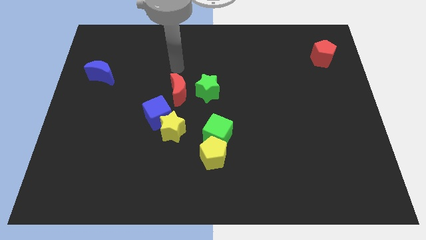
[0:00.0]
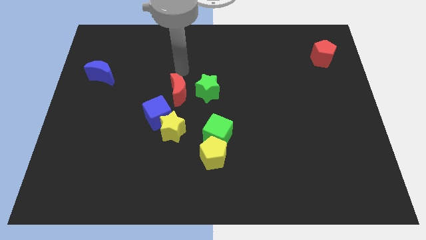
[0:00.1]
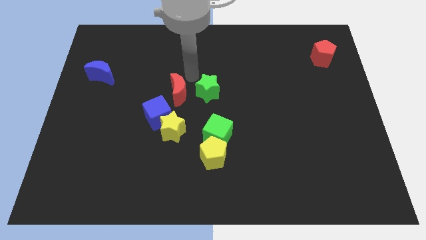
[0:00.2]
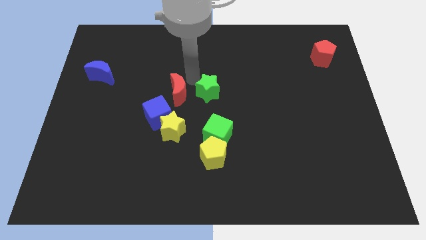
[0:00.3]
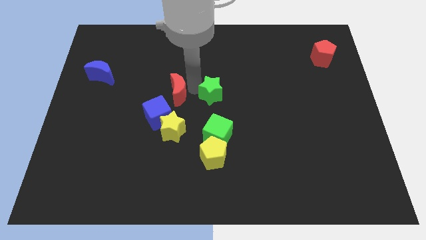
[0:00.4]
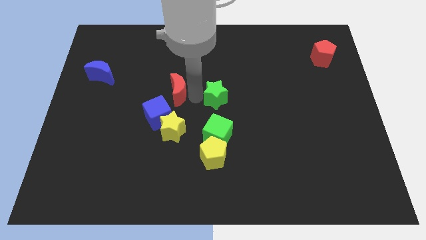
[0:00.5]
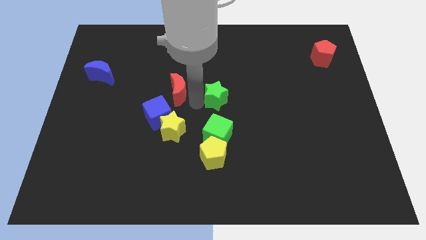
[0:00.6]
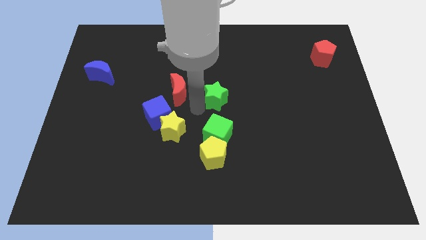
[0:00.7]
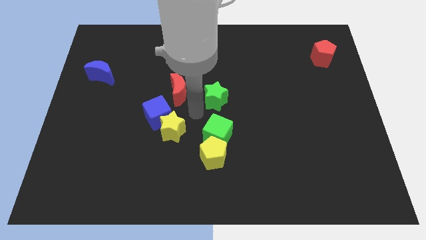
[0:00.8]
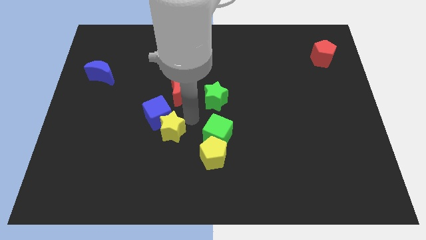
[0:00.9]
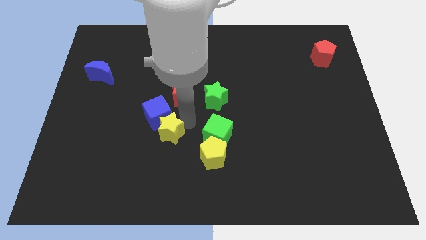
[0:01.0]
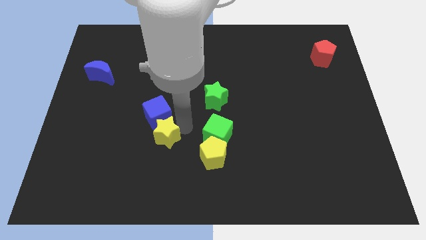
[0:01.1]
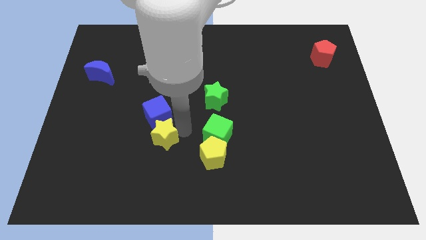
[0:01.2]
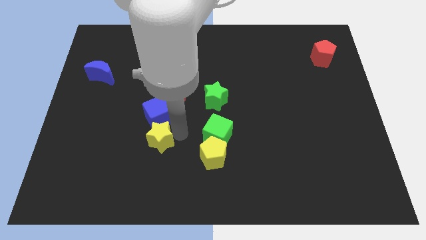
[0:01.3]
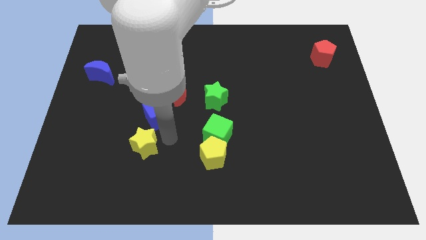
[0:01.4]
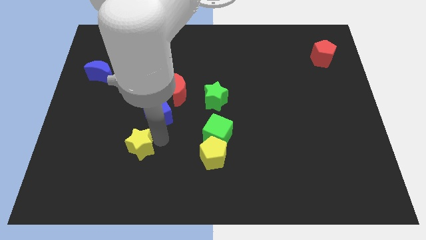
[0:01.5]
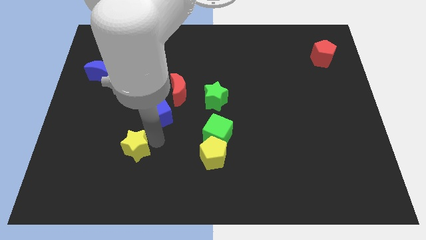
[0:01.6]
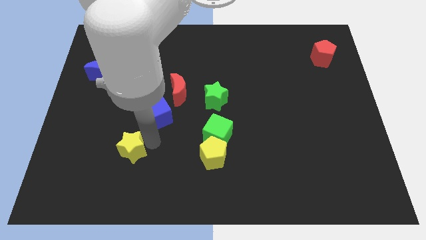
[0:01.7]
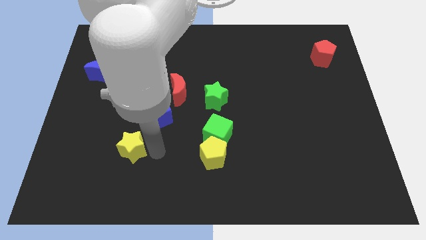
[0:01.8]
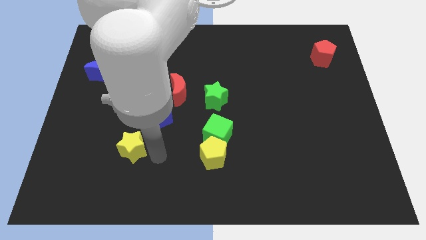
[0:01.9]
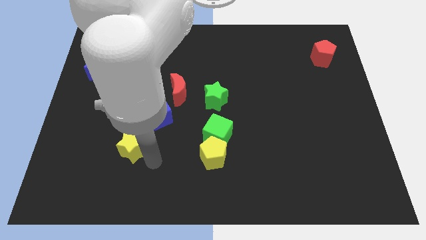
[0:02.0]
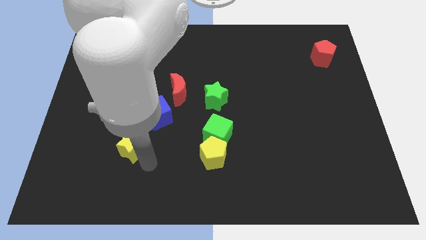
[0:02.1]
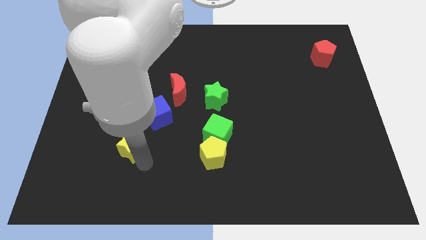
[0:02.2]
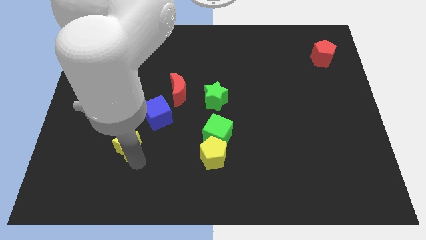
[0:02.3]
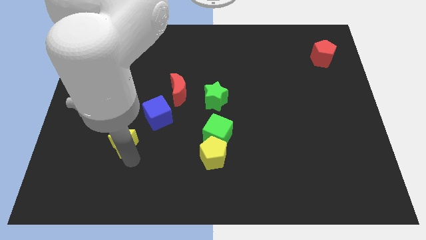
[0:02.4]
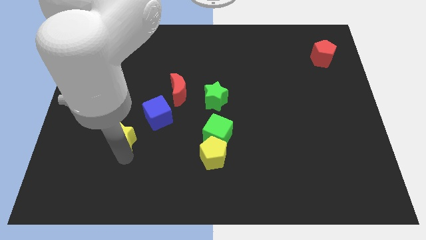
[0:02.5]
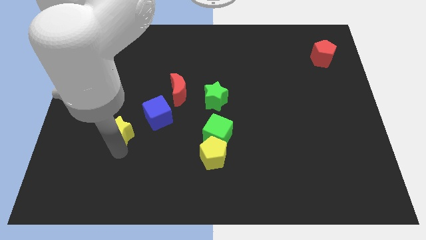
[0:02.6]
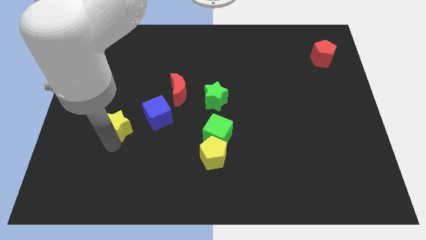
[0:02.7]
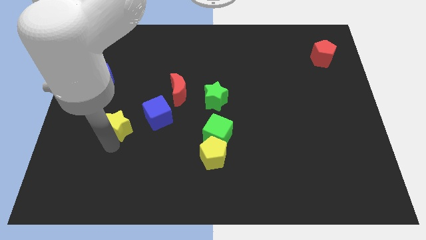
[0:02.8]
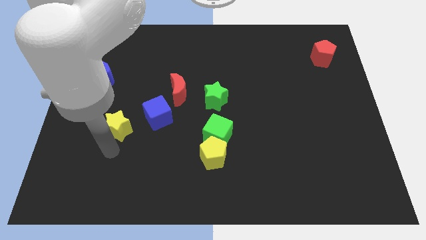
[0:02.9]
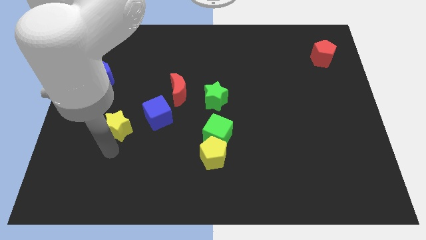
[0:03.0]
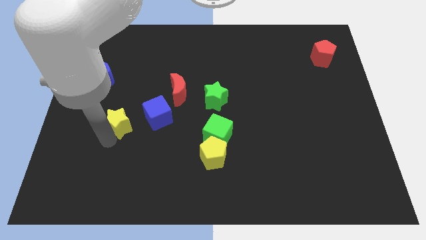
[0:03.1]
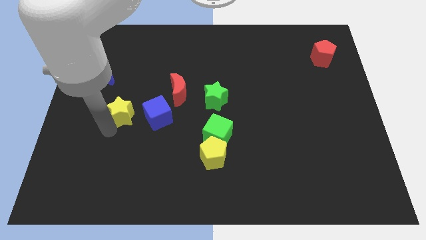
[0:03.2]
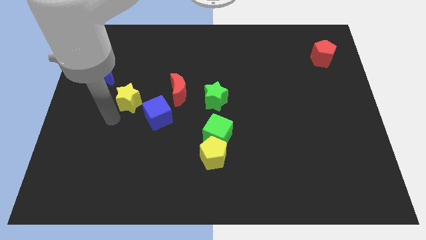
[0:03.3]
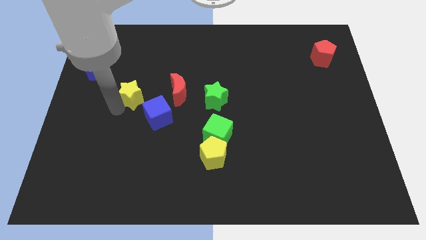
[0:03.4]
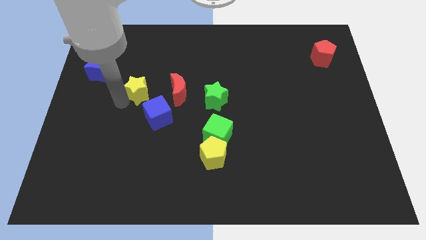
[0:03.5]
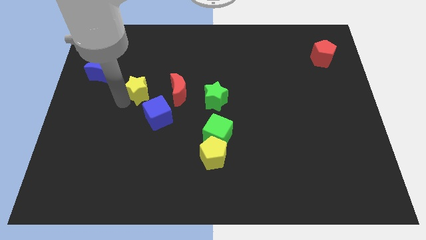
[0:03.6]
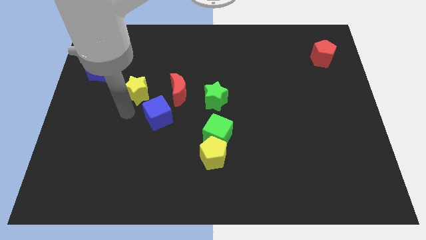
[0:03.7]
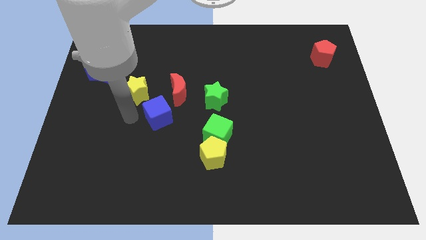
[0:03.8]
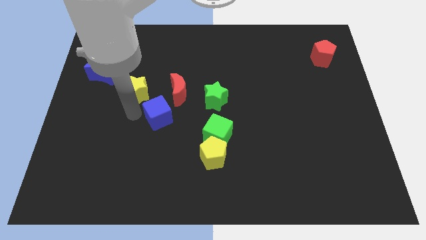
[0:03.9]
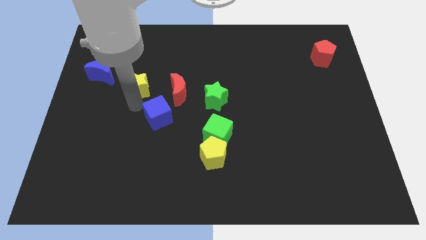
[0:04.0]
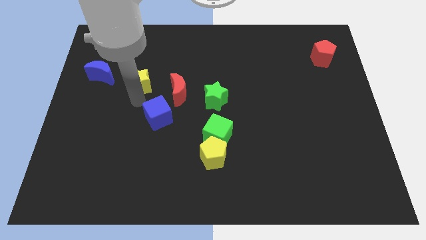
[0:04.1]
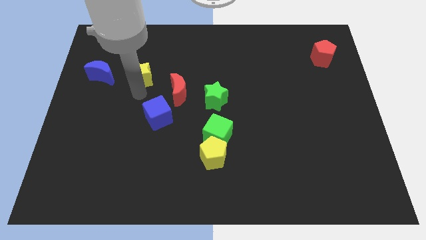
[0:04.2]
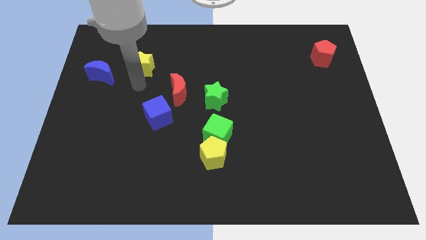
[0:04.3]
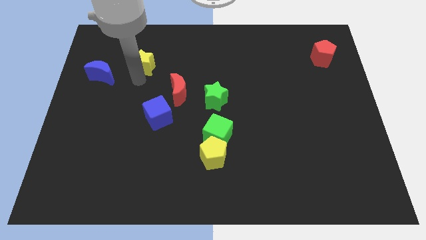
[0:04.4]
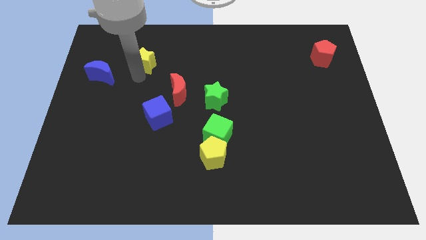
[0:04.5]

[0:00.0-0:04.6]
push the yellow star towards the top side of the table

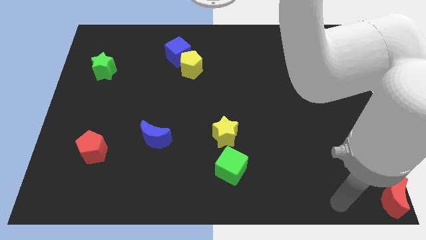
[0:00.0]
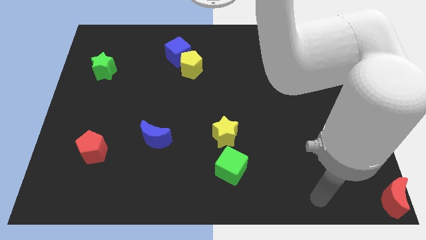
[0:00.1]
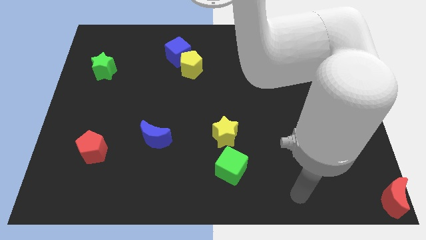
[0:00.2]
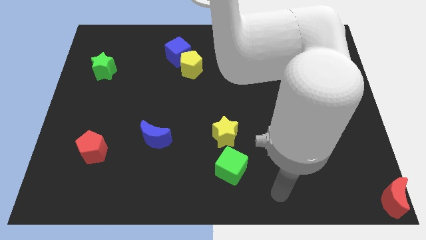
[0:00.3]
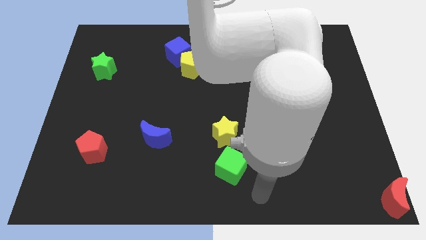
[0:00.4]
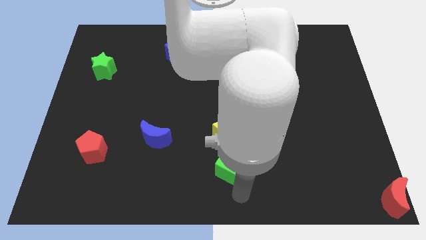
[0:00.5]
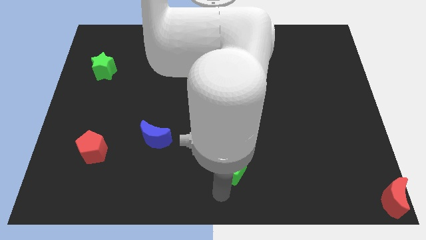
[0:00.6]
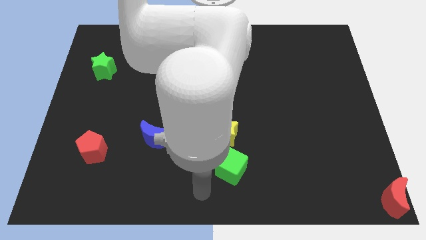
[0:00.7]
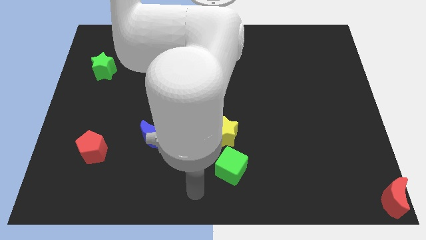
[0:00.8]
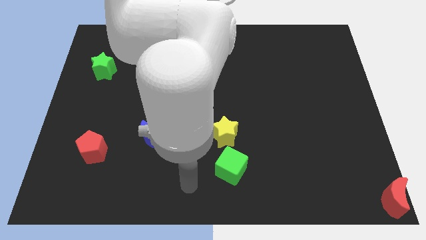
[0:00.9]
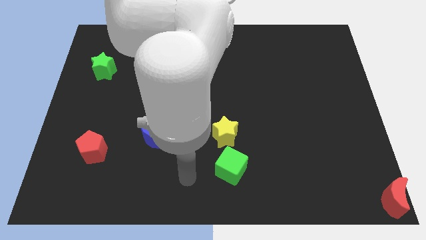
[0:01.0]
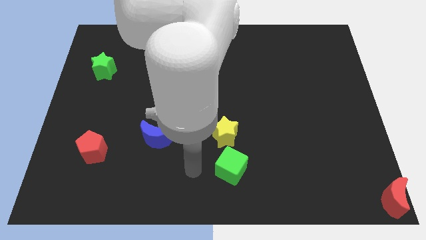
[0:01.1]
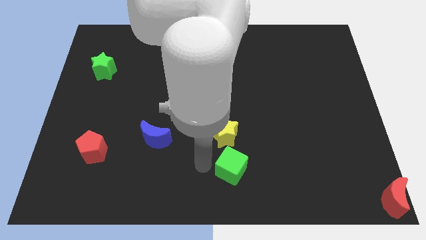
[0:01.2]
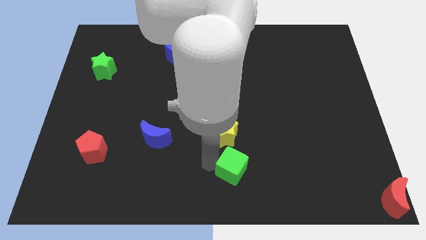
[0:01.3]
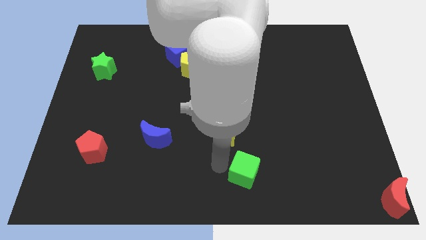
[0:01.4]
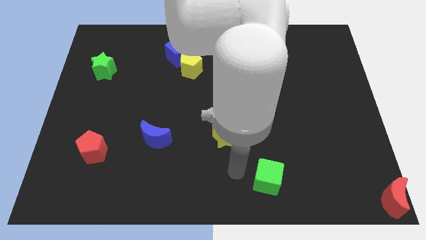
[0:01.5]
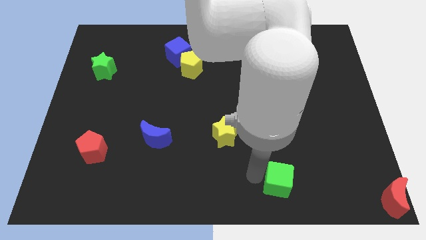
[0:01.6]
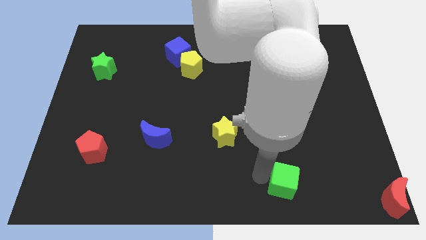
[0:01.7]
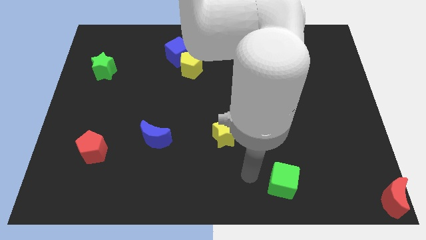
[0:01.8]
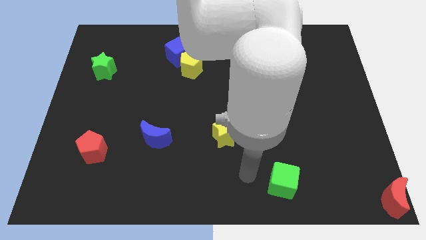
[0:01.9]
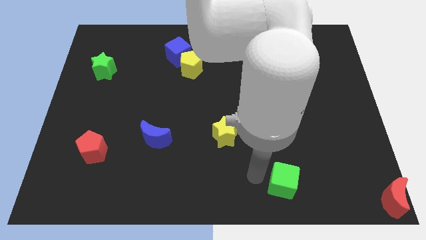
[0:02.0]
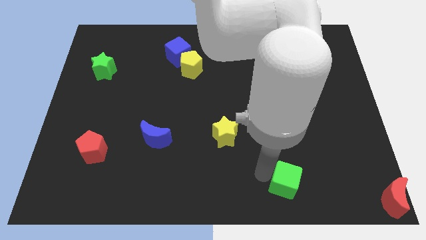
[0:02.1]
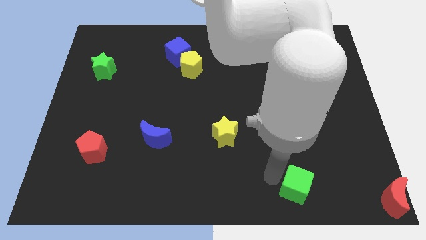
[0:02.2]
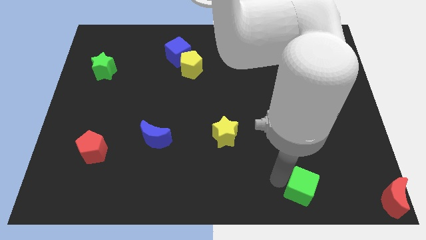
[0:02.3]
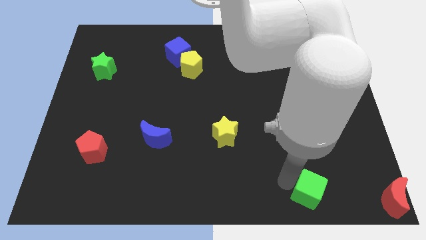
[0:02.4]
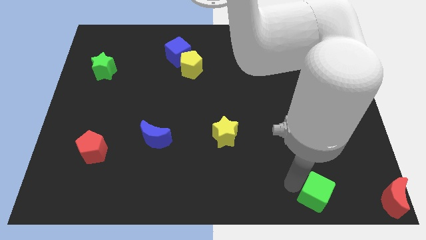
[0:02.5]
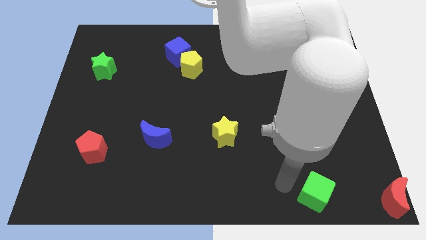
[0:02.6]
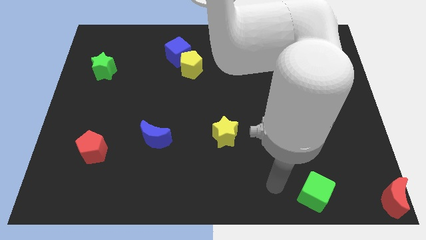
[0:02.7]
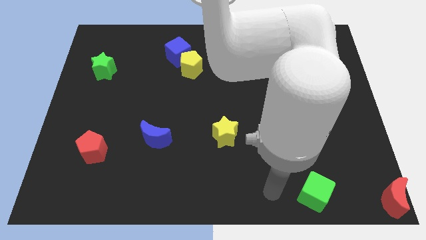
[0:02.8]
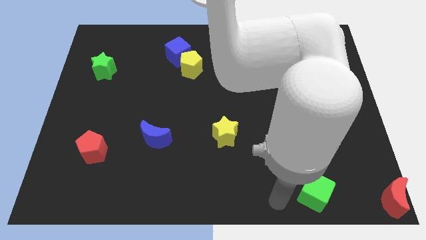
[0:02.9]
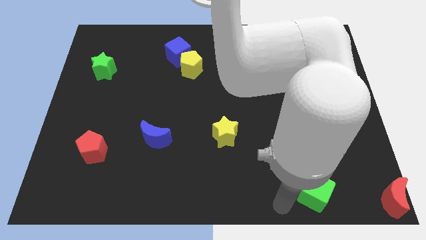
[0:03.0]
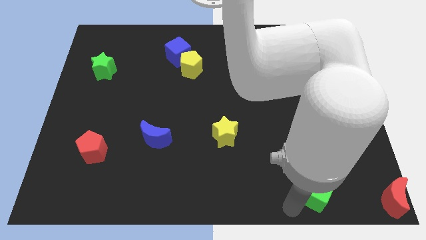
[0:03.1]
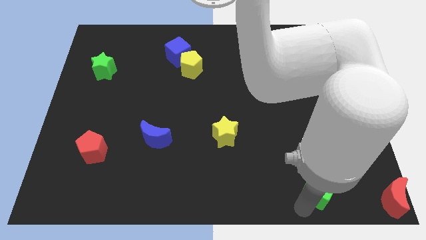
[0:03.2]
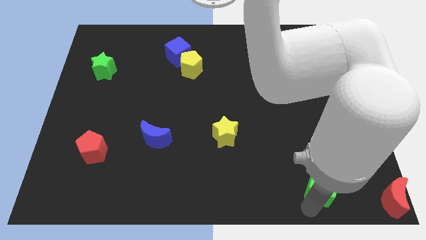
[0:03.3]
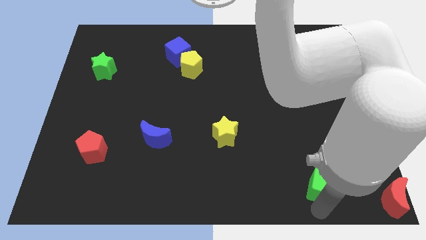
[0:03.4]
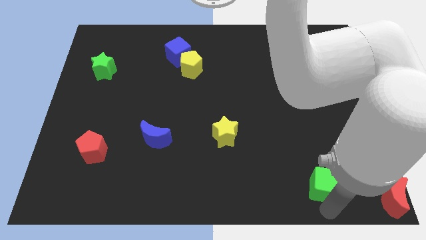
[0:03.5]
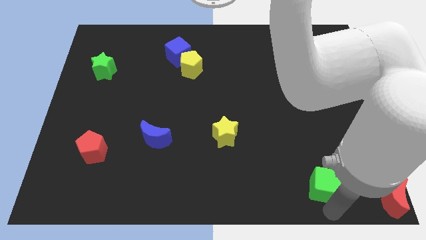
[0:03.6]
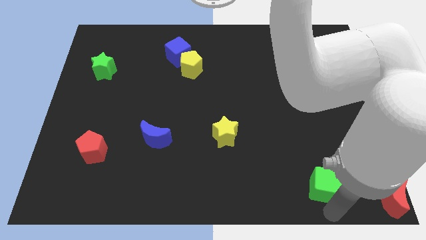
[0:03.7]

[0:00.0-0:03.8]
move the green cube away from the bottom side of the yellow star

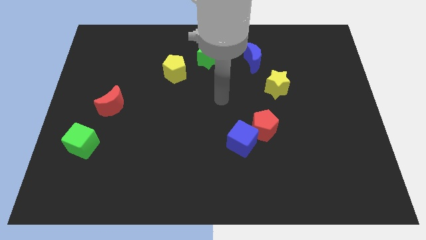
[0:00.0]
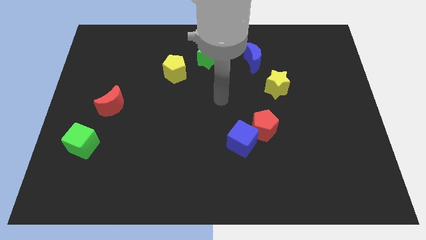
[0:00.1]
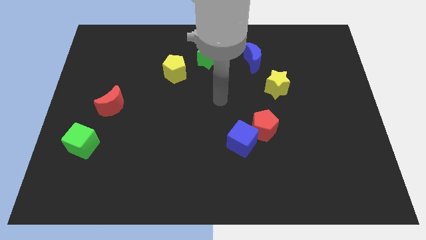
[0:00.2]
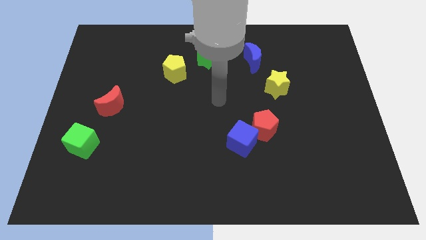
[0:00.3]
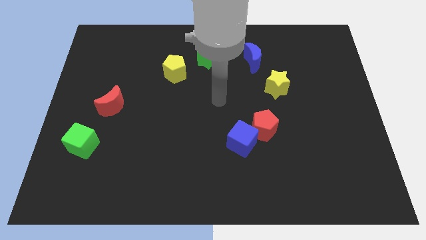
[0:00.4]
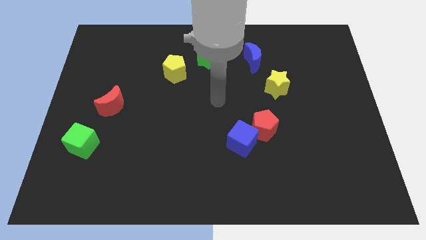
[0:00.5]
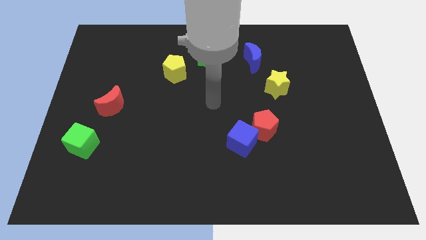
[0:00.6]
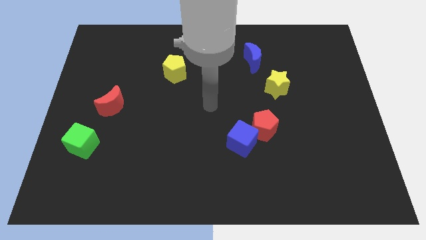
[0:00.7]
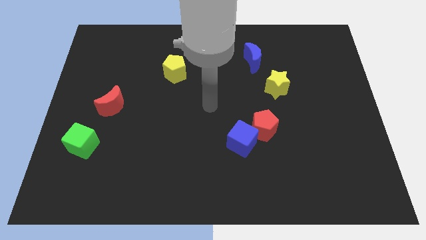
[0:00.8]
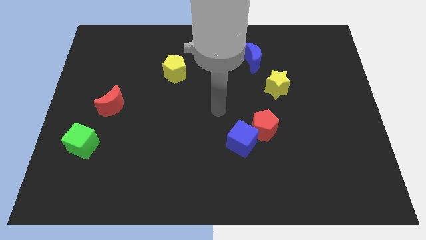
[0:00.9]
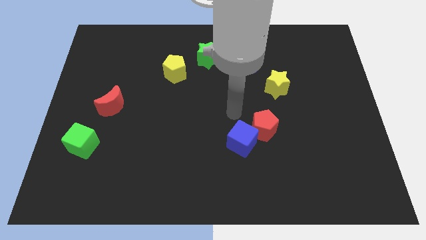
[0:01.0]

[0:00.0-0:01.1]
move the arm to the centre of the board
